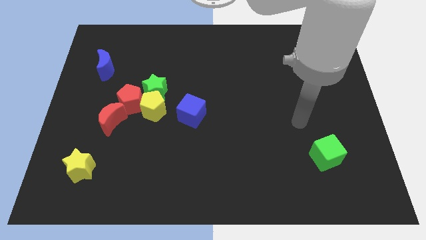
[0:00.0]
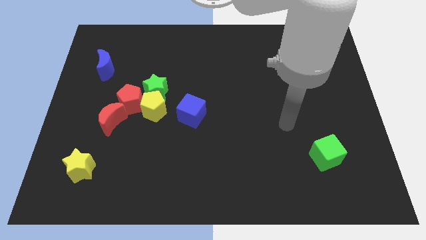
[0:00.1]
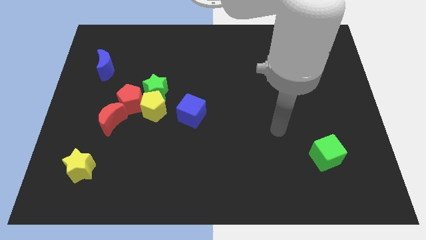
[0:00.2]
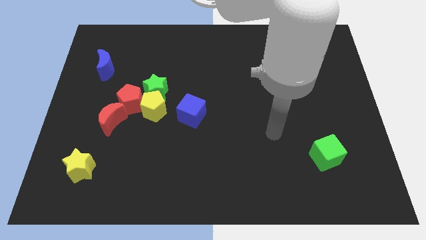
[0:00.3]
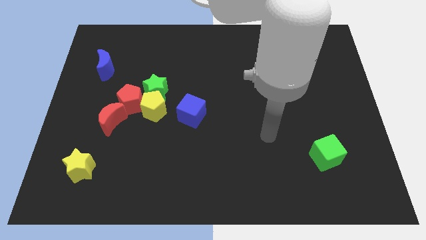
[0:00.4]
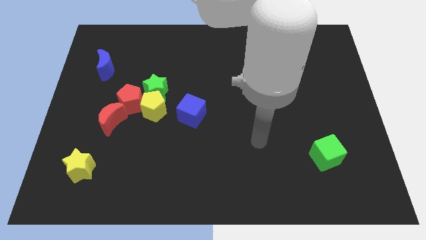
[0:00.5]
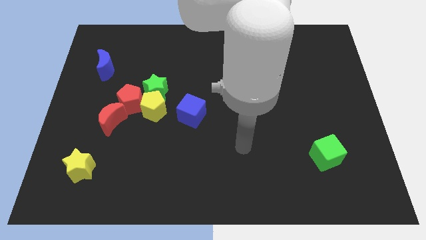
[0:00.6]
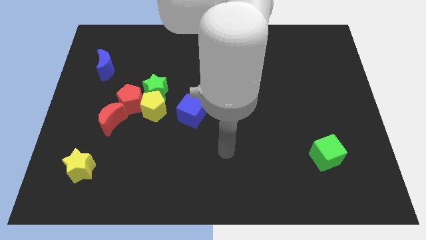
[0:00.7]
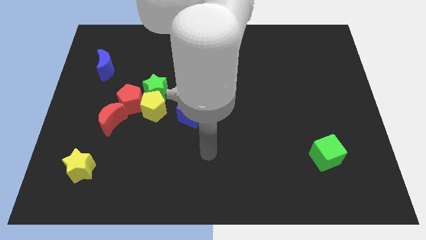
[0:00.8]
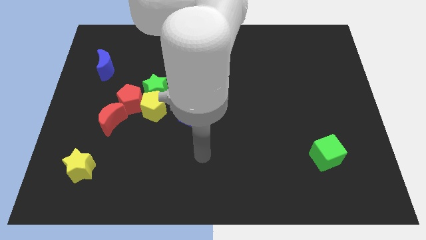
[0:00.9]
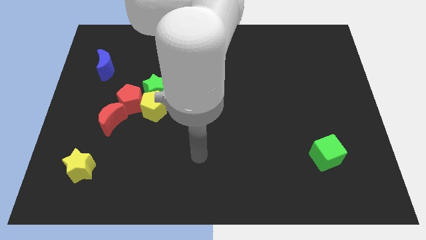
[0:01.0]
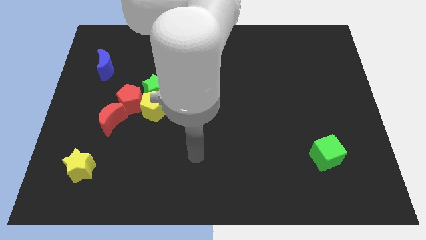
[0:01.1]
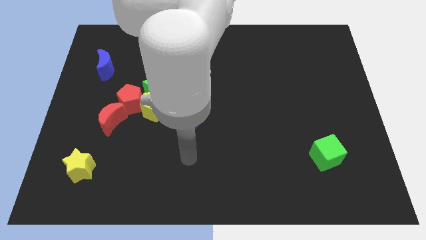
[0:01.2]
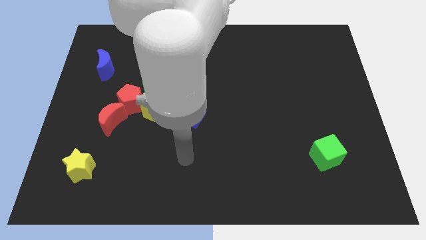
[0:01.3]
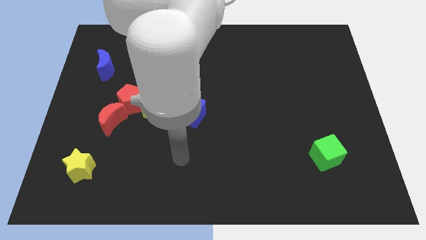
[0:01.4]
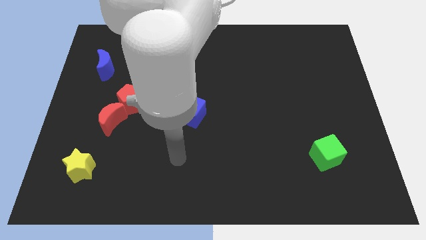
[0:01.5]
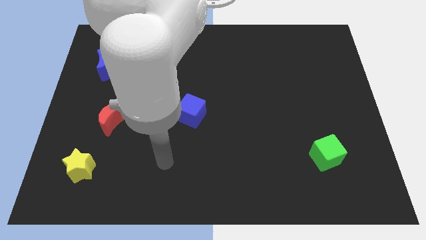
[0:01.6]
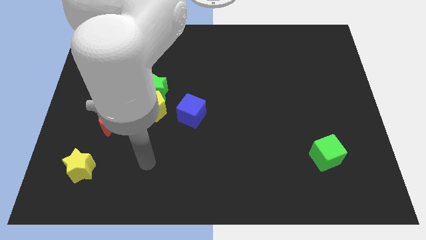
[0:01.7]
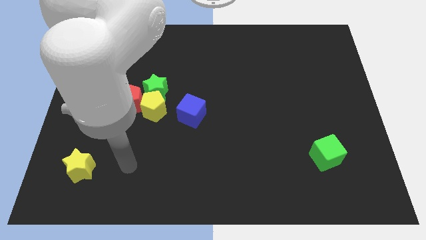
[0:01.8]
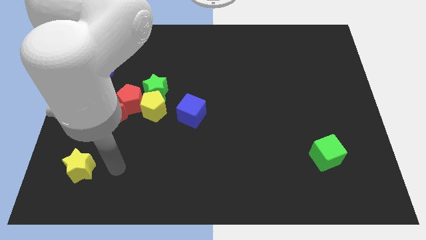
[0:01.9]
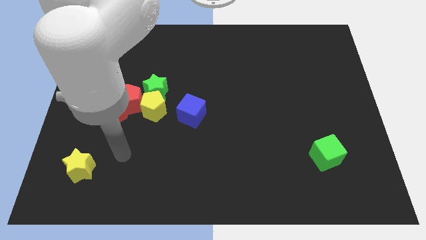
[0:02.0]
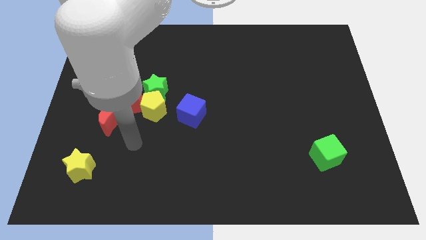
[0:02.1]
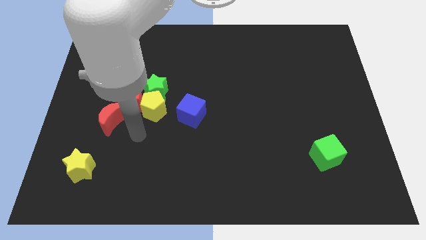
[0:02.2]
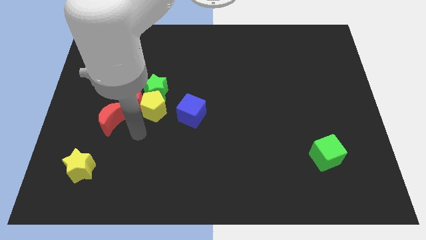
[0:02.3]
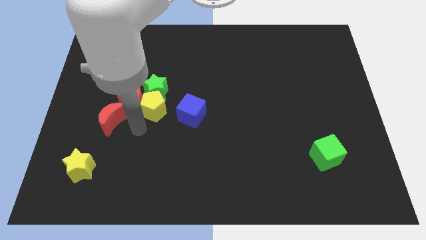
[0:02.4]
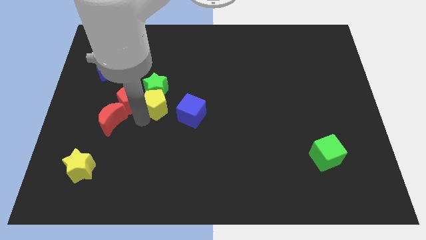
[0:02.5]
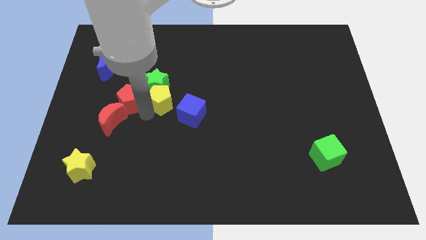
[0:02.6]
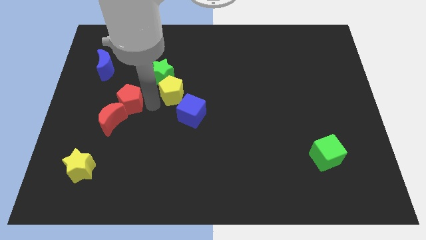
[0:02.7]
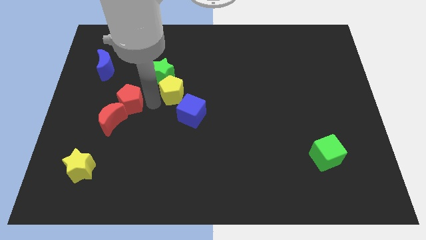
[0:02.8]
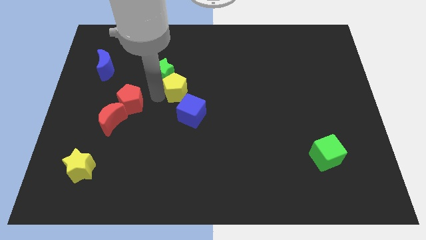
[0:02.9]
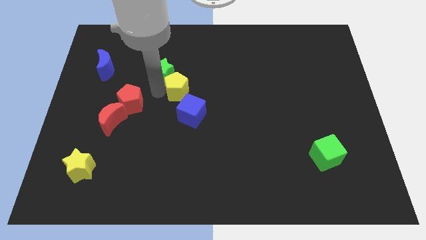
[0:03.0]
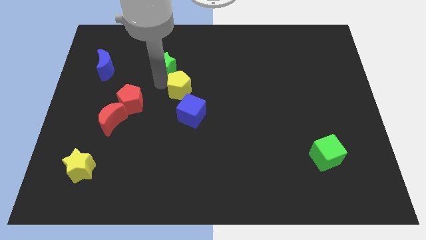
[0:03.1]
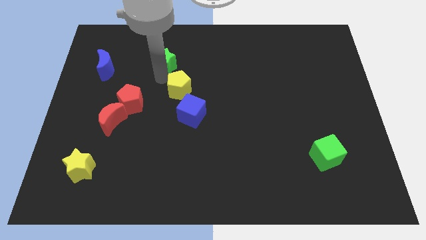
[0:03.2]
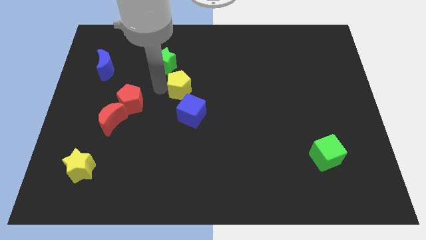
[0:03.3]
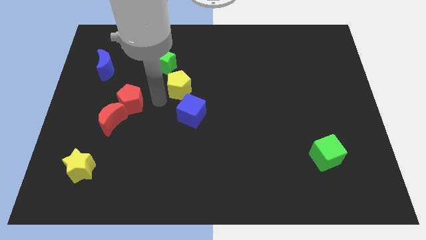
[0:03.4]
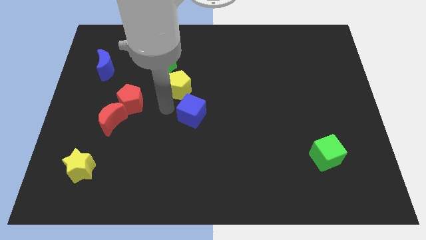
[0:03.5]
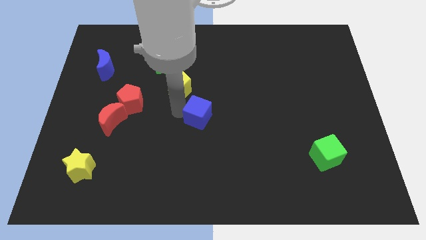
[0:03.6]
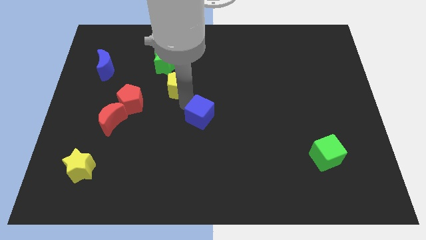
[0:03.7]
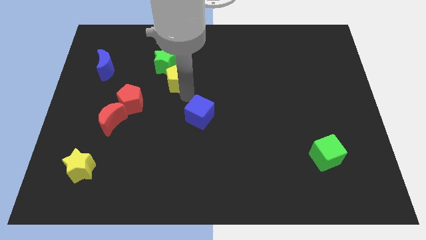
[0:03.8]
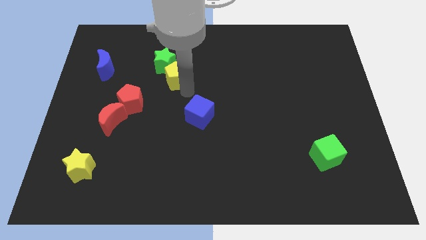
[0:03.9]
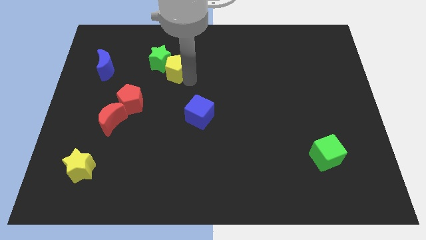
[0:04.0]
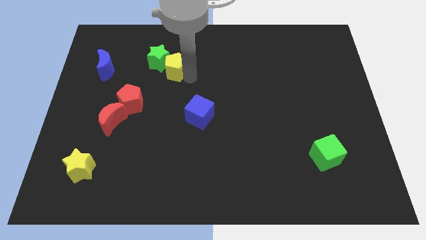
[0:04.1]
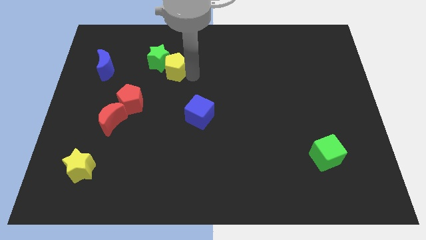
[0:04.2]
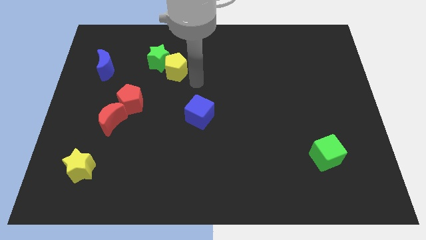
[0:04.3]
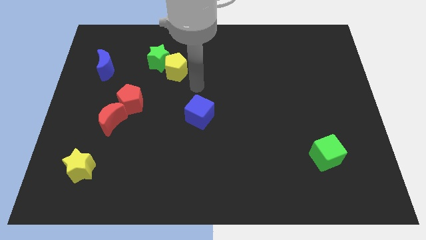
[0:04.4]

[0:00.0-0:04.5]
move the yellow pentagon towards the top center of the board

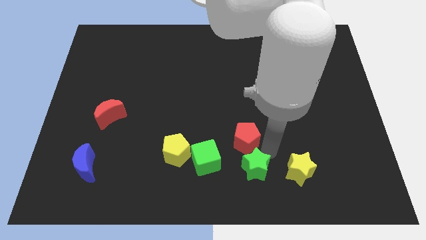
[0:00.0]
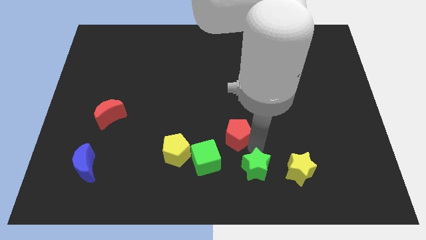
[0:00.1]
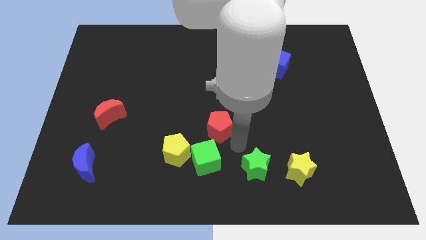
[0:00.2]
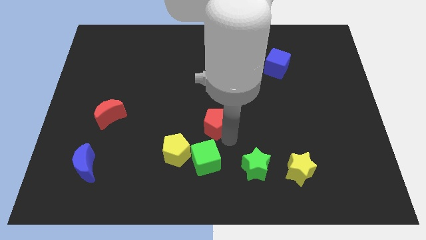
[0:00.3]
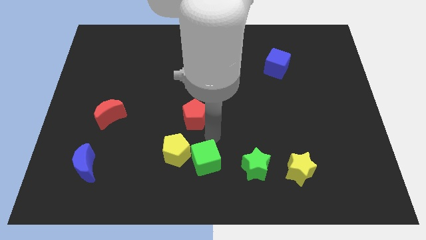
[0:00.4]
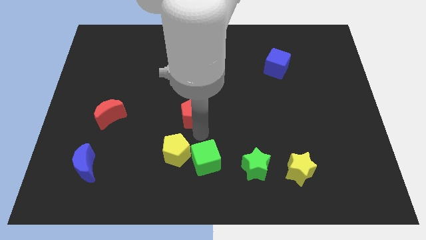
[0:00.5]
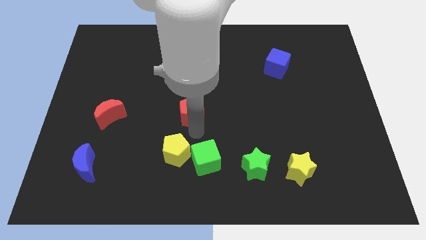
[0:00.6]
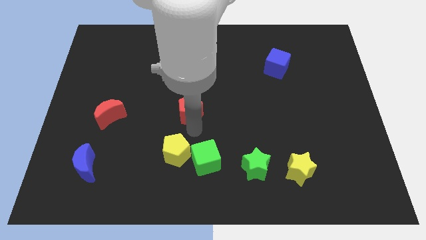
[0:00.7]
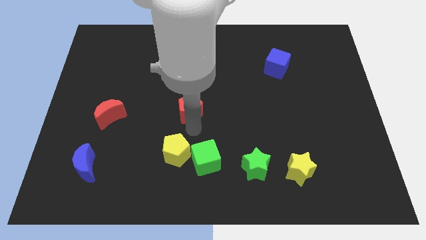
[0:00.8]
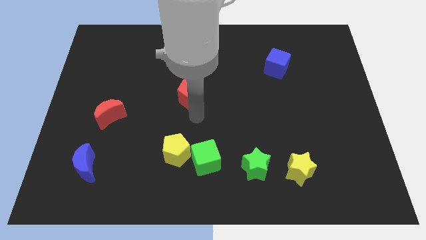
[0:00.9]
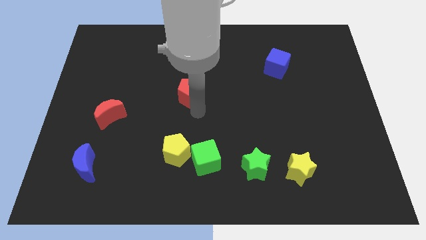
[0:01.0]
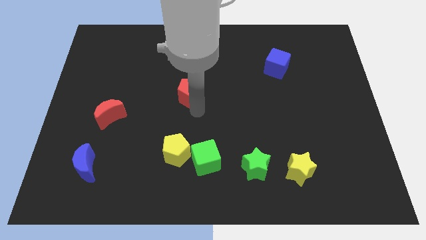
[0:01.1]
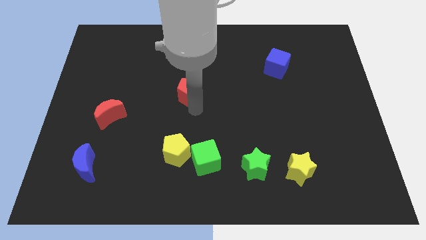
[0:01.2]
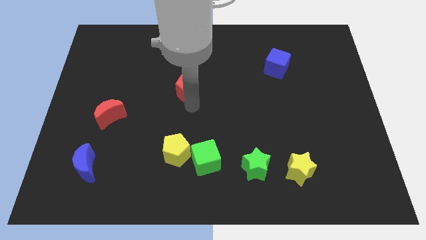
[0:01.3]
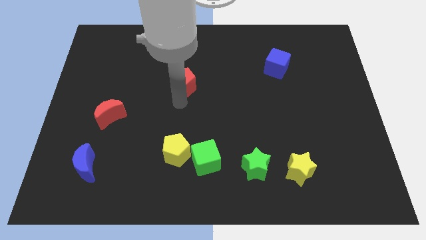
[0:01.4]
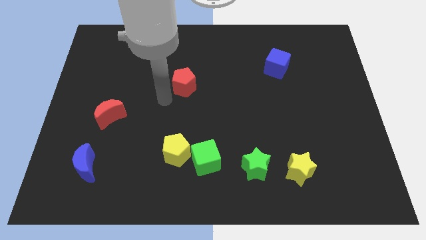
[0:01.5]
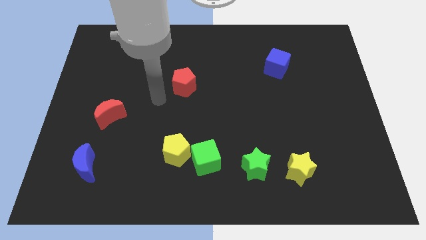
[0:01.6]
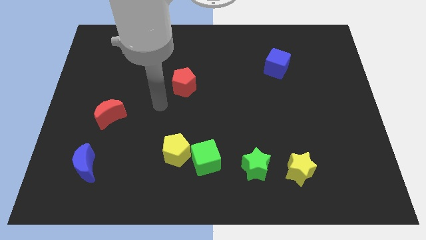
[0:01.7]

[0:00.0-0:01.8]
place the red pentagon diagonally to the top right of the red moon

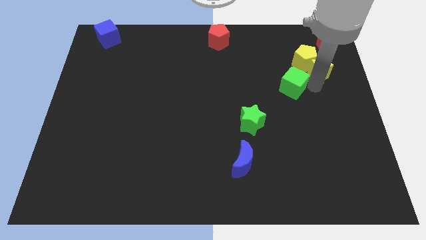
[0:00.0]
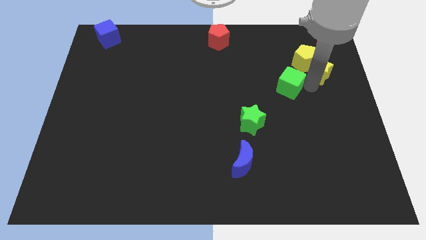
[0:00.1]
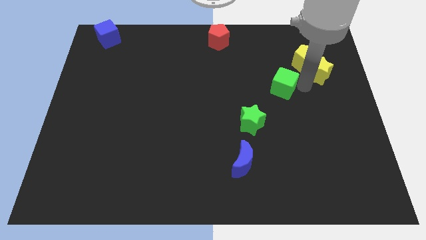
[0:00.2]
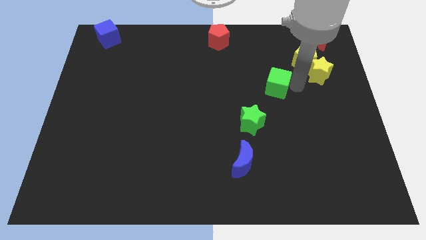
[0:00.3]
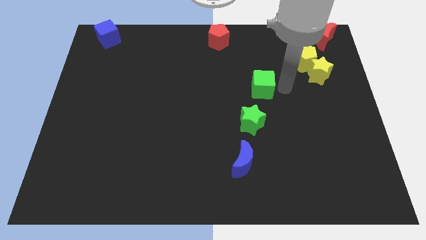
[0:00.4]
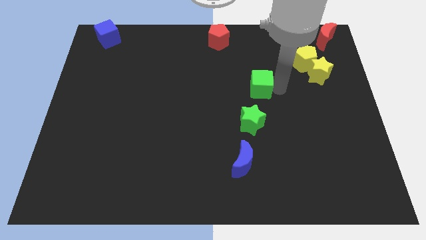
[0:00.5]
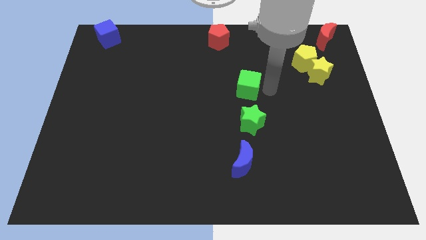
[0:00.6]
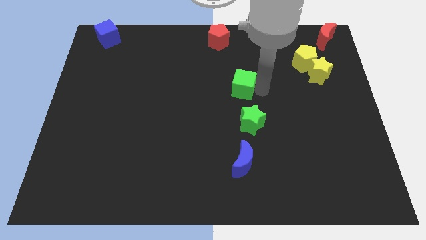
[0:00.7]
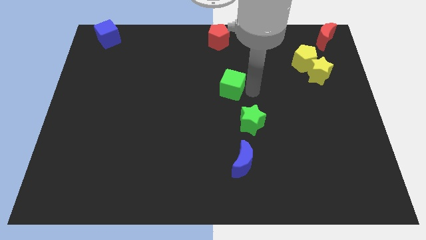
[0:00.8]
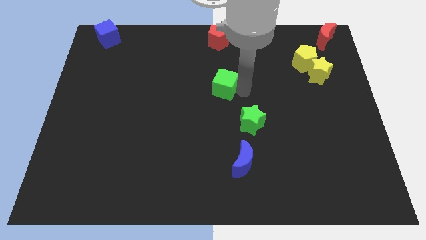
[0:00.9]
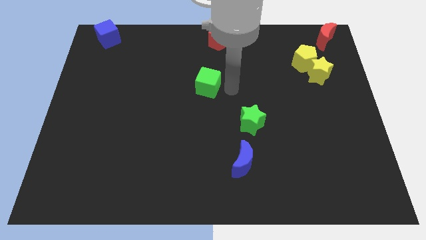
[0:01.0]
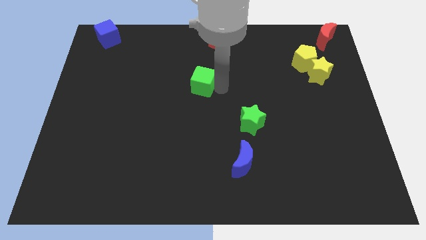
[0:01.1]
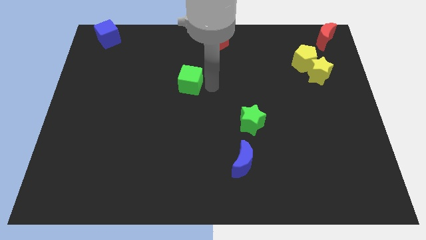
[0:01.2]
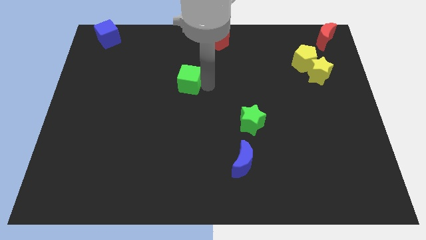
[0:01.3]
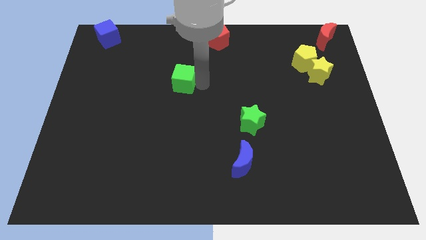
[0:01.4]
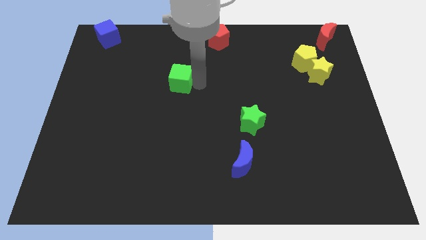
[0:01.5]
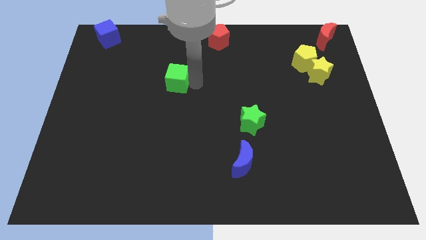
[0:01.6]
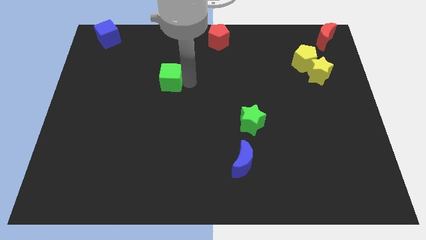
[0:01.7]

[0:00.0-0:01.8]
push the green cube to the bottom left of the red pentagon

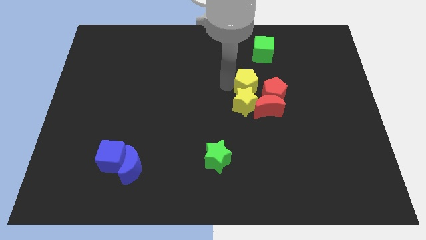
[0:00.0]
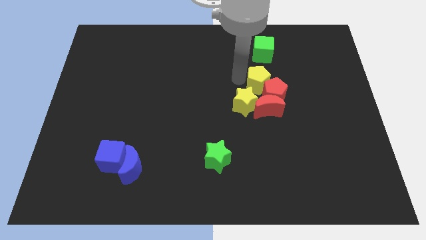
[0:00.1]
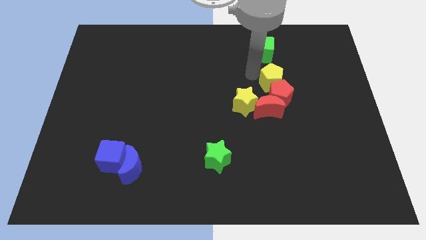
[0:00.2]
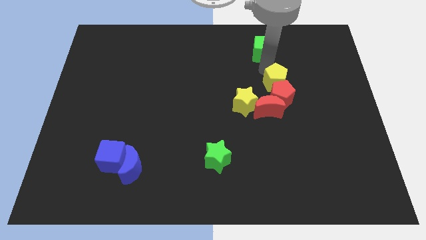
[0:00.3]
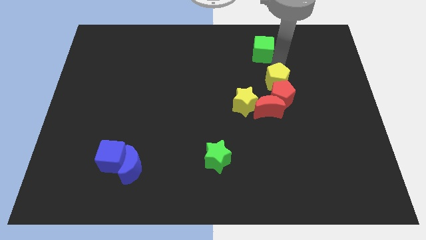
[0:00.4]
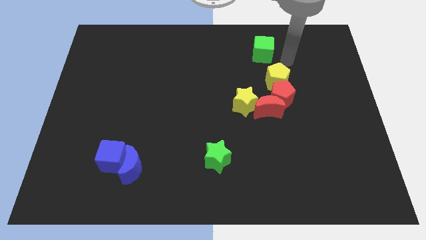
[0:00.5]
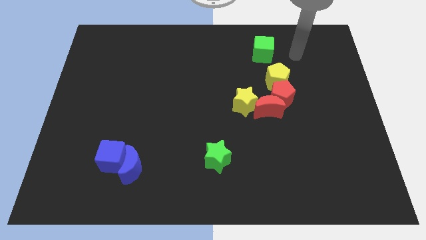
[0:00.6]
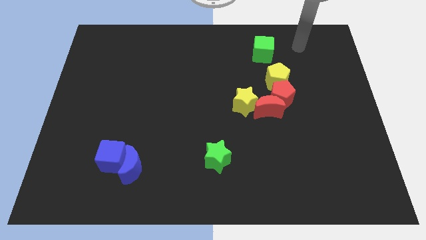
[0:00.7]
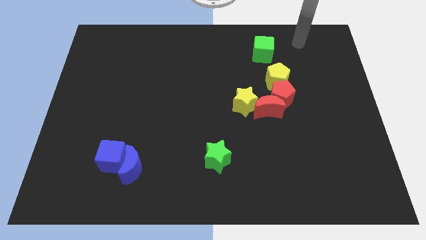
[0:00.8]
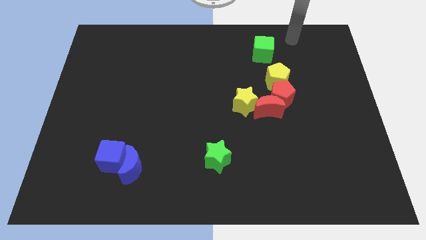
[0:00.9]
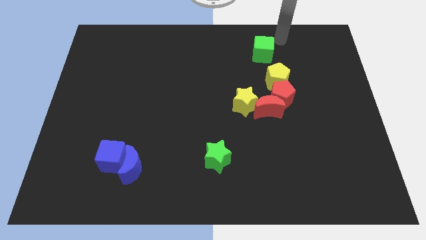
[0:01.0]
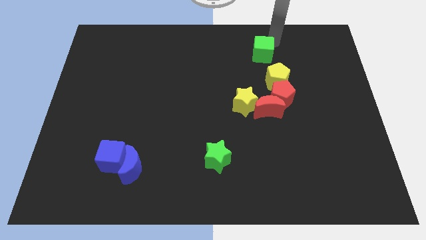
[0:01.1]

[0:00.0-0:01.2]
place the yellow pentagon in between the red pentagon and the green cube
